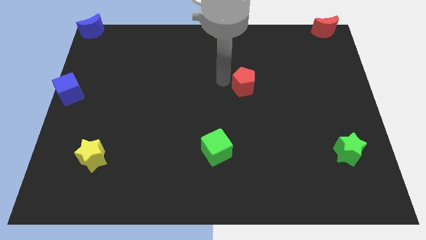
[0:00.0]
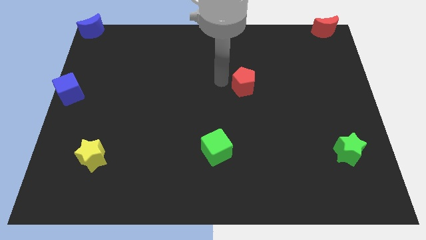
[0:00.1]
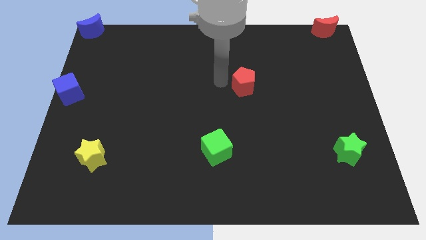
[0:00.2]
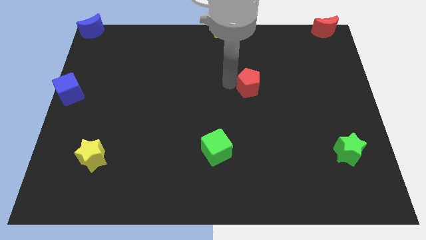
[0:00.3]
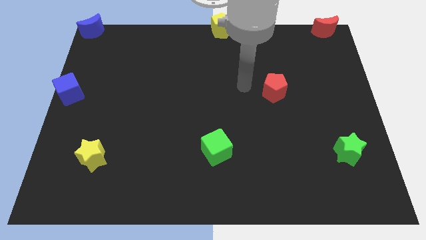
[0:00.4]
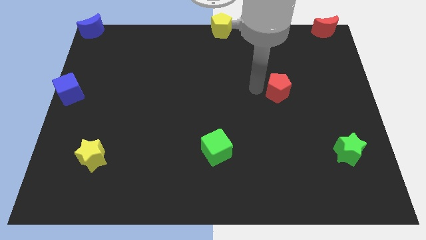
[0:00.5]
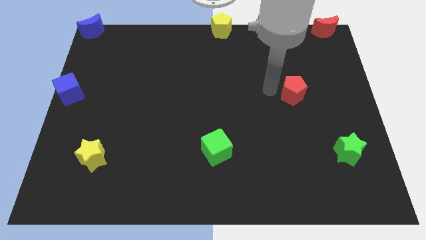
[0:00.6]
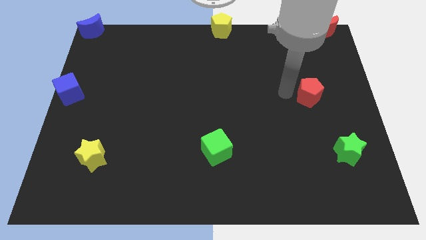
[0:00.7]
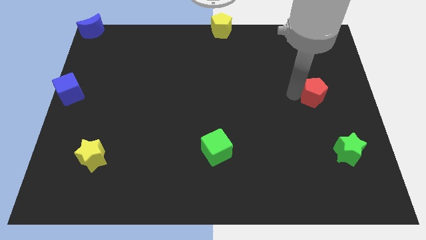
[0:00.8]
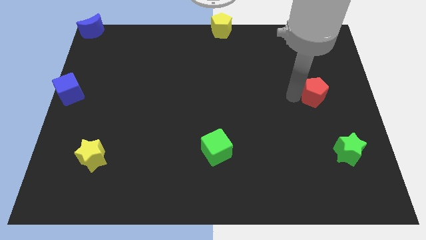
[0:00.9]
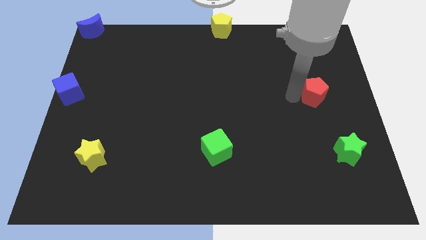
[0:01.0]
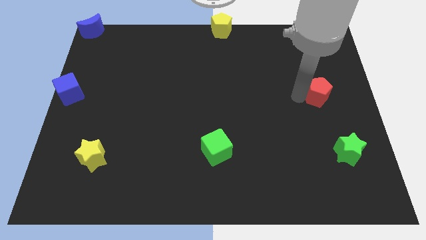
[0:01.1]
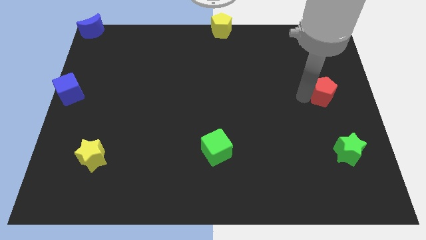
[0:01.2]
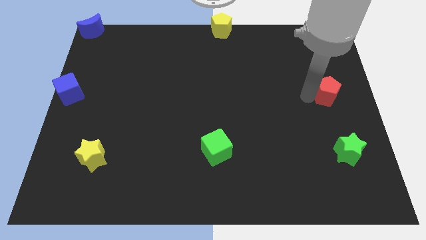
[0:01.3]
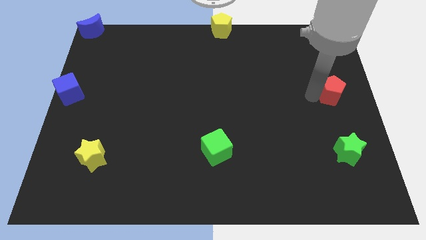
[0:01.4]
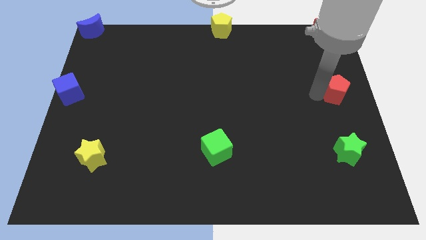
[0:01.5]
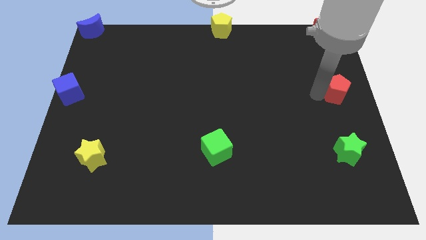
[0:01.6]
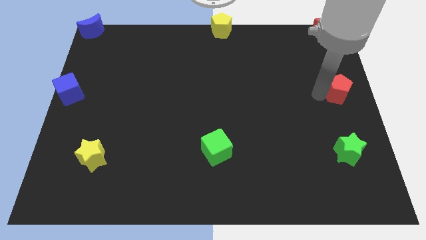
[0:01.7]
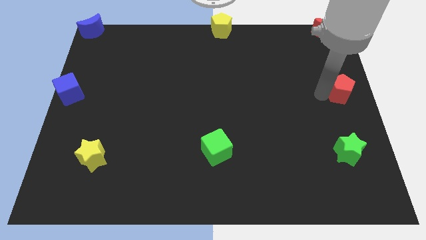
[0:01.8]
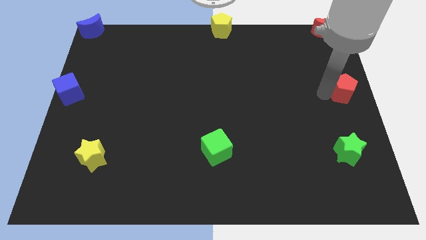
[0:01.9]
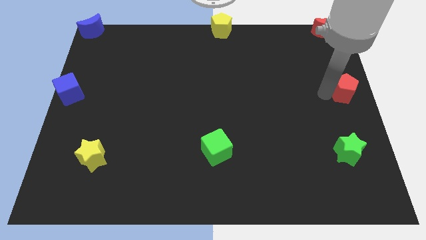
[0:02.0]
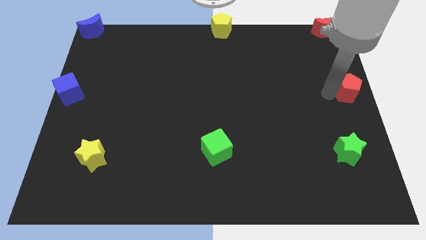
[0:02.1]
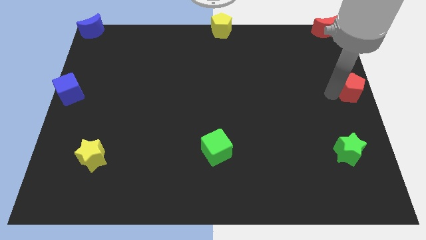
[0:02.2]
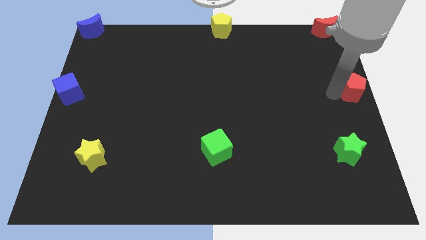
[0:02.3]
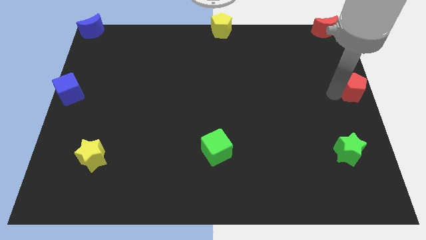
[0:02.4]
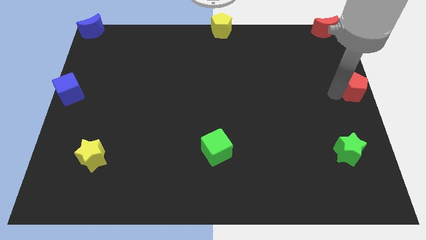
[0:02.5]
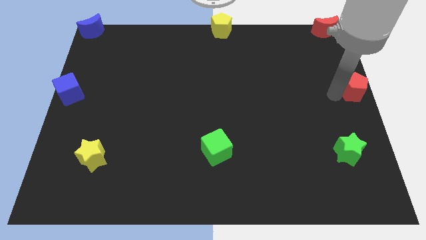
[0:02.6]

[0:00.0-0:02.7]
place red pentagon below red crescent

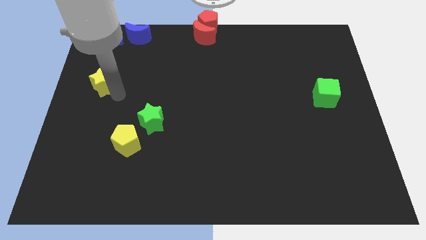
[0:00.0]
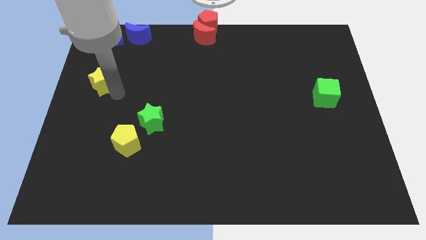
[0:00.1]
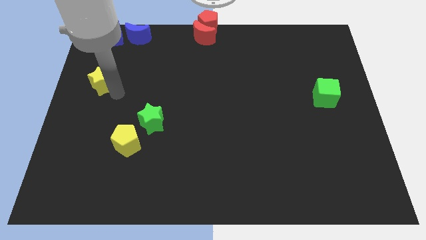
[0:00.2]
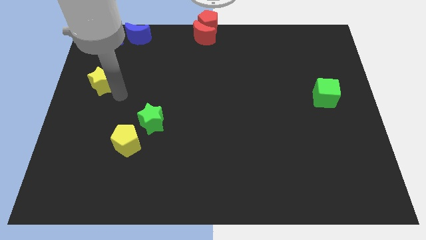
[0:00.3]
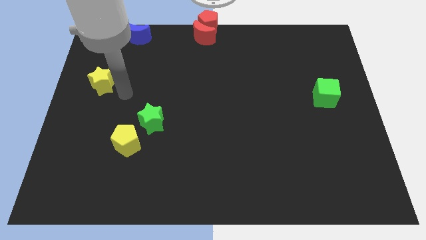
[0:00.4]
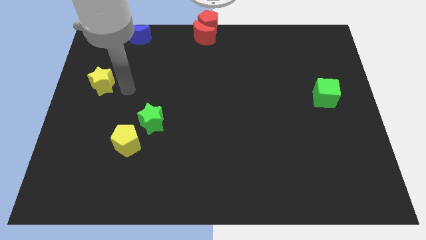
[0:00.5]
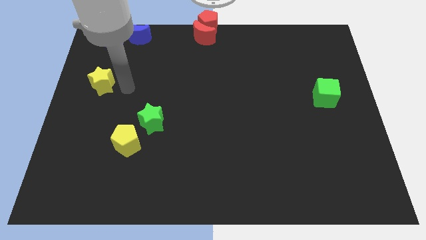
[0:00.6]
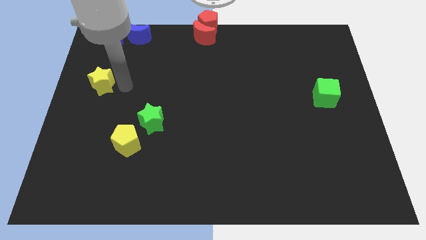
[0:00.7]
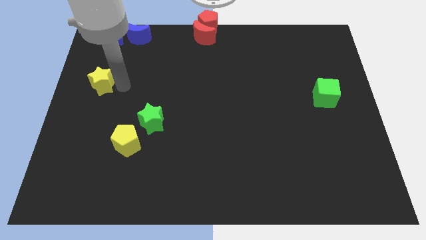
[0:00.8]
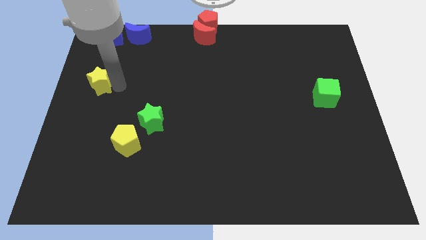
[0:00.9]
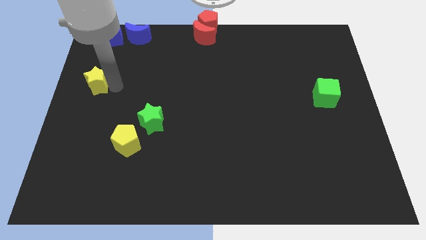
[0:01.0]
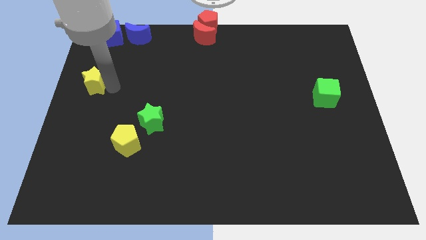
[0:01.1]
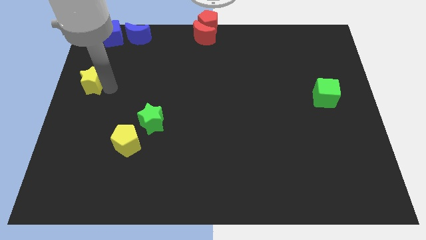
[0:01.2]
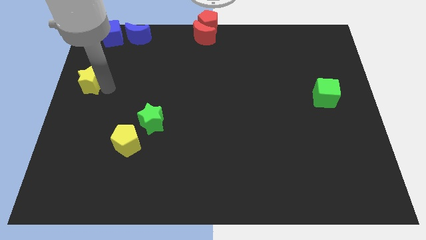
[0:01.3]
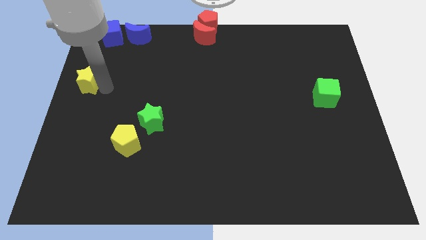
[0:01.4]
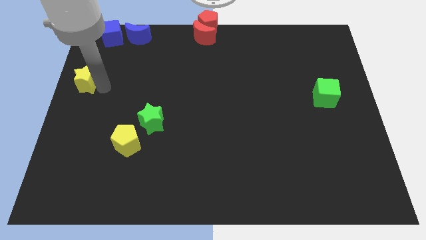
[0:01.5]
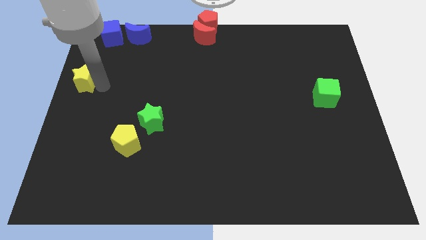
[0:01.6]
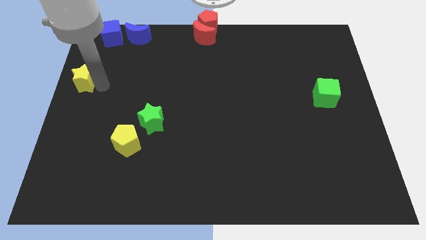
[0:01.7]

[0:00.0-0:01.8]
place yellow star on left side of the board

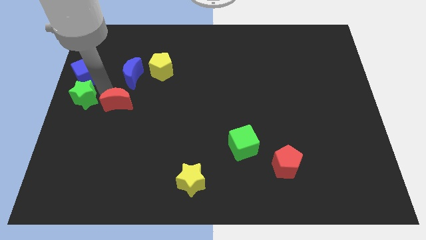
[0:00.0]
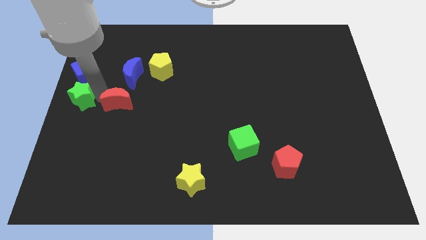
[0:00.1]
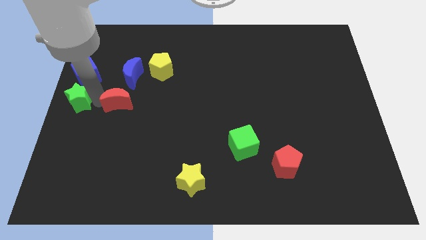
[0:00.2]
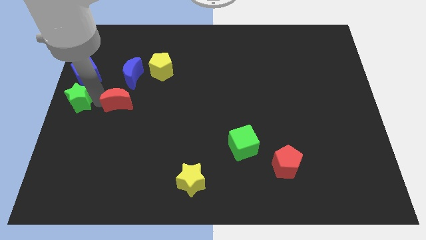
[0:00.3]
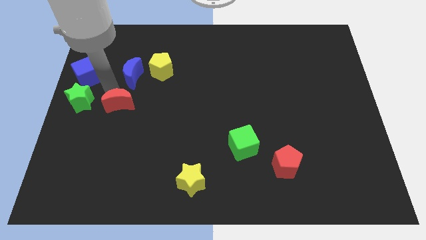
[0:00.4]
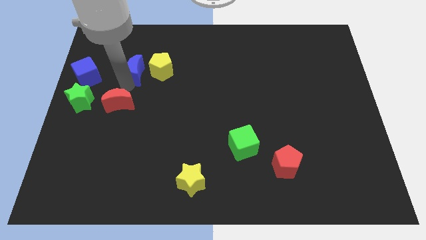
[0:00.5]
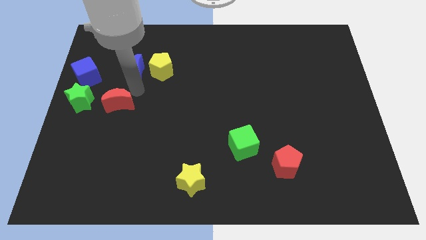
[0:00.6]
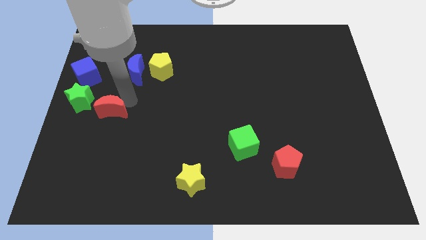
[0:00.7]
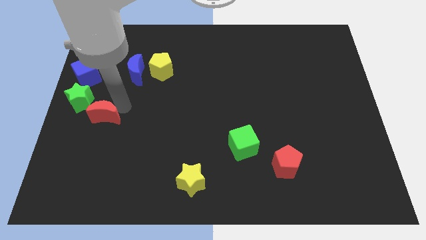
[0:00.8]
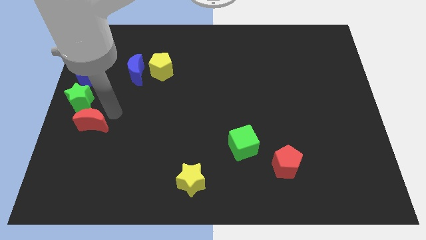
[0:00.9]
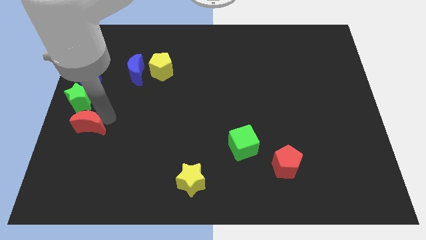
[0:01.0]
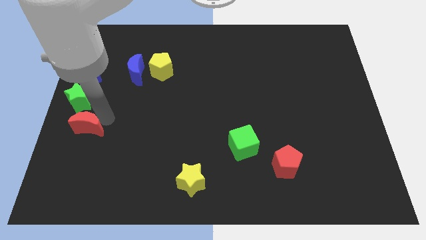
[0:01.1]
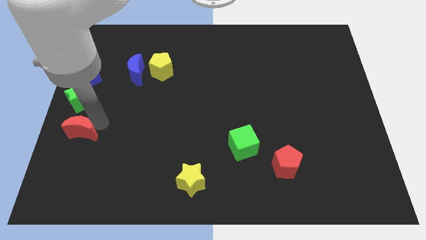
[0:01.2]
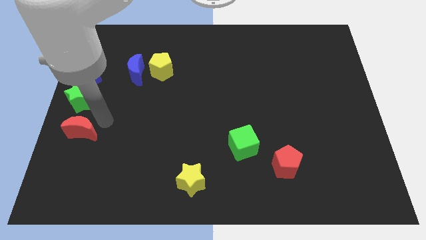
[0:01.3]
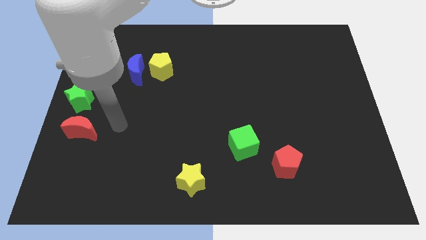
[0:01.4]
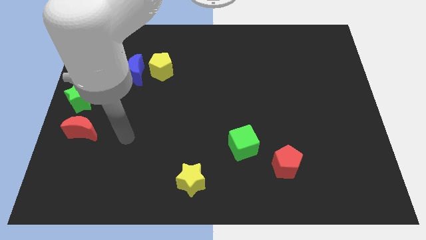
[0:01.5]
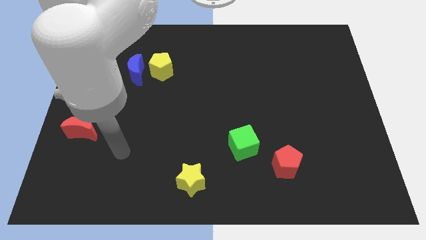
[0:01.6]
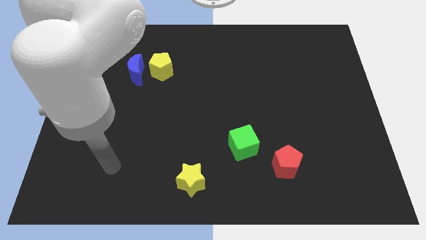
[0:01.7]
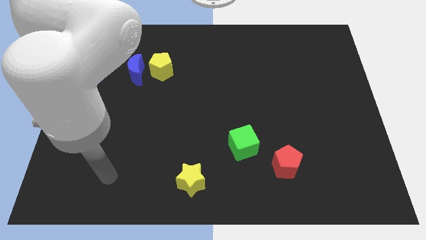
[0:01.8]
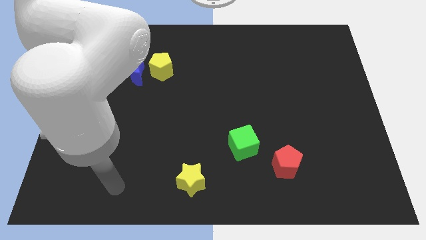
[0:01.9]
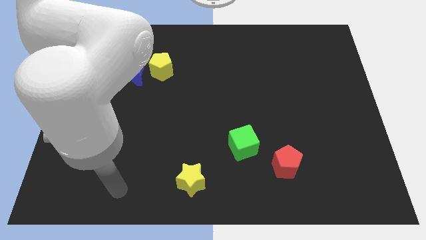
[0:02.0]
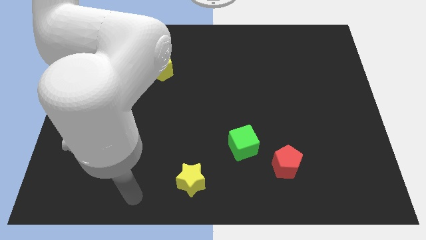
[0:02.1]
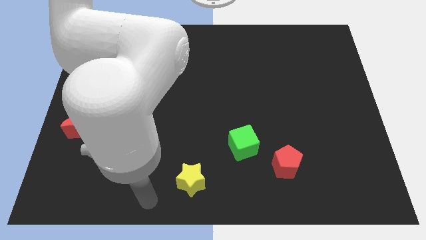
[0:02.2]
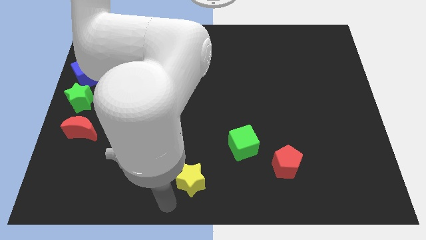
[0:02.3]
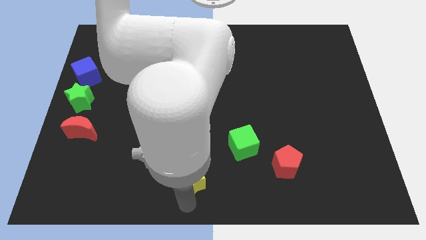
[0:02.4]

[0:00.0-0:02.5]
place the red crescent below the green star

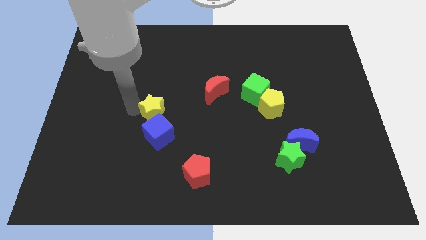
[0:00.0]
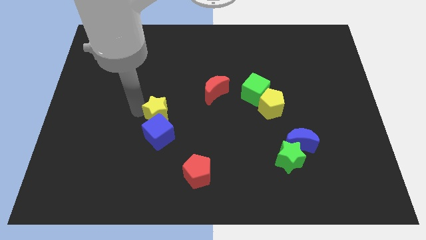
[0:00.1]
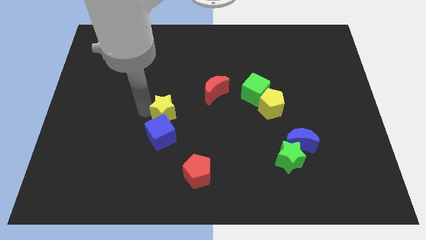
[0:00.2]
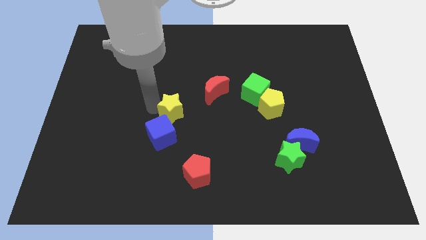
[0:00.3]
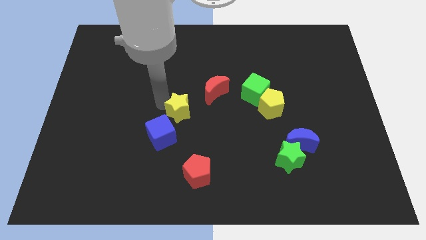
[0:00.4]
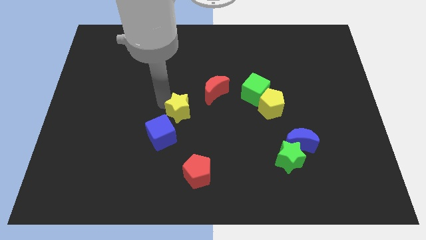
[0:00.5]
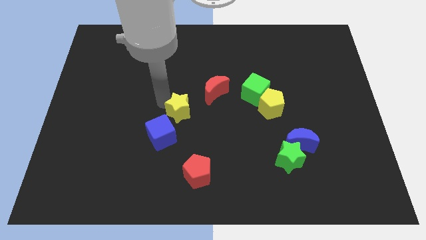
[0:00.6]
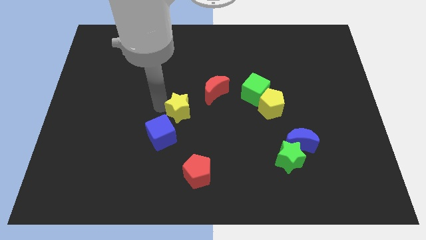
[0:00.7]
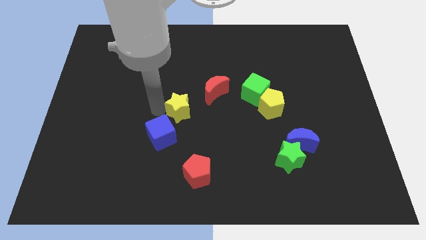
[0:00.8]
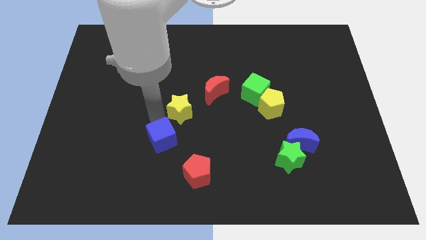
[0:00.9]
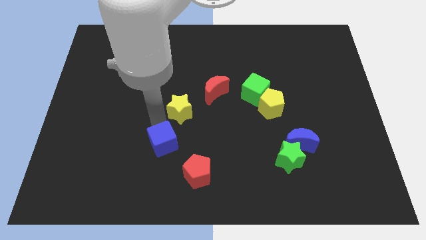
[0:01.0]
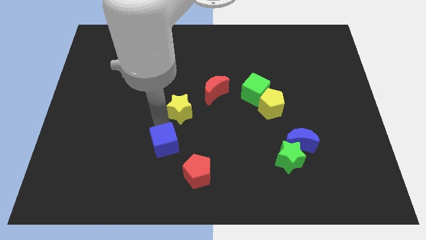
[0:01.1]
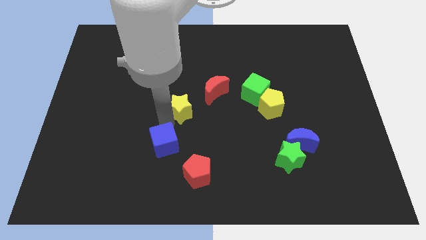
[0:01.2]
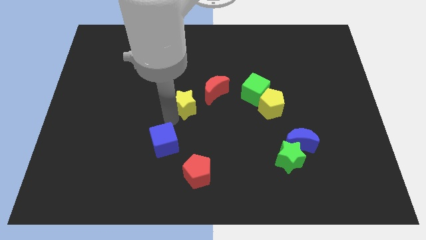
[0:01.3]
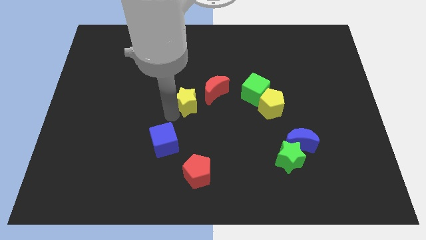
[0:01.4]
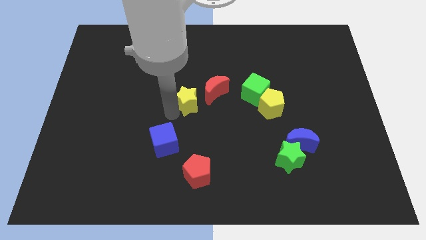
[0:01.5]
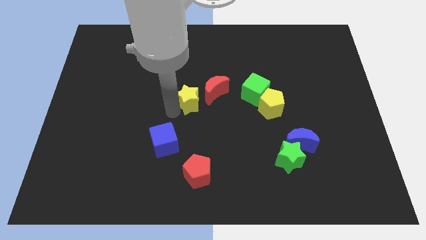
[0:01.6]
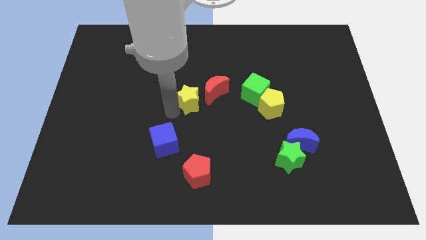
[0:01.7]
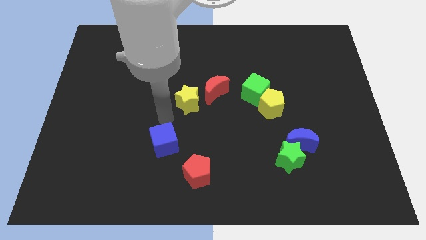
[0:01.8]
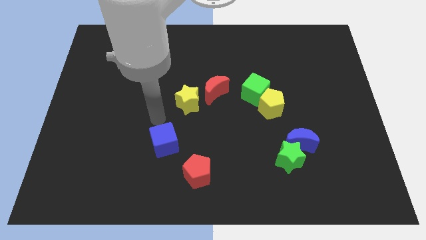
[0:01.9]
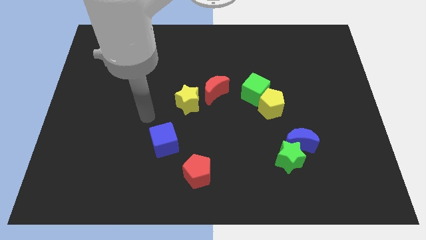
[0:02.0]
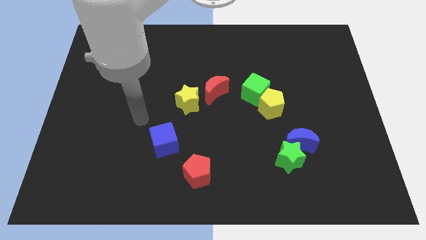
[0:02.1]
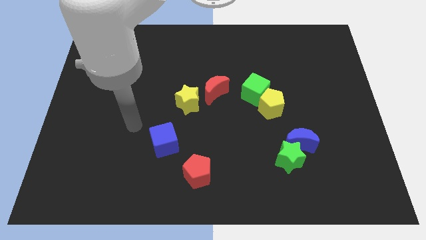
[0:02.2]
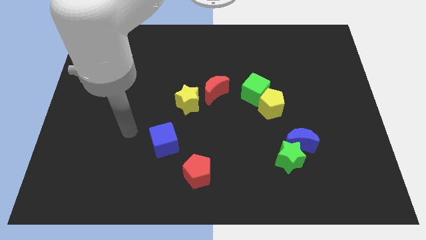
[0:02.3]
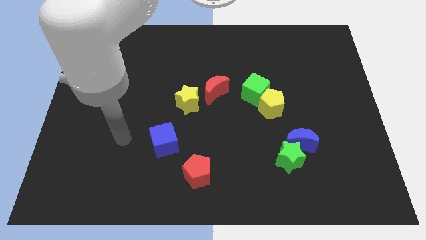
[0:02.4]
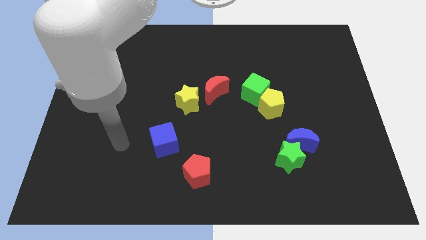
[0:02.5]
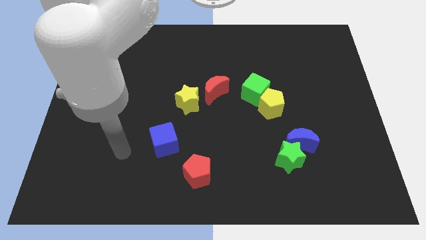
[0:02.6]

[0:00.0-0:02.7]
move the yellow star close to the red moon
